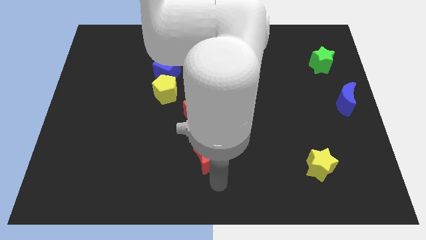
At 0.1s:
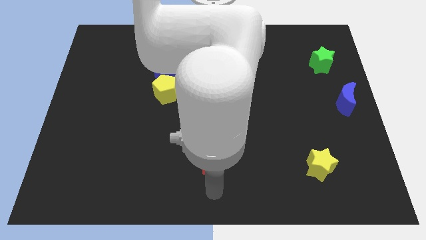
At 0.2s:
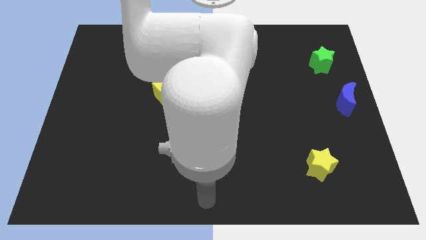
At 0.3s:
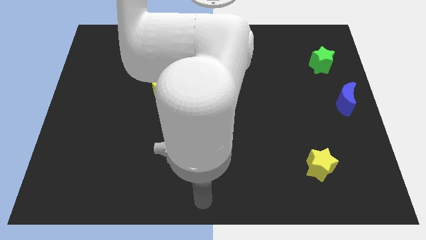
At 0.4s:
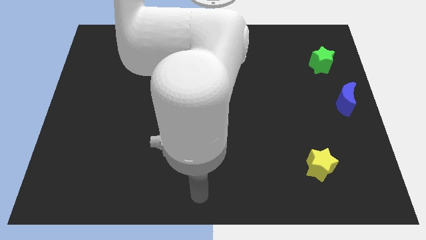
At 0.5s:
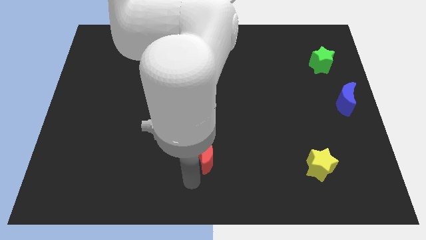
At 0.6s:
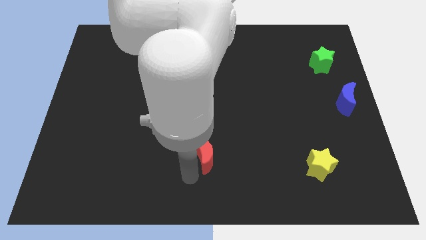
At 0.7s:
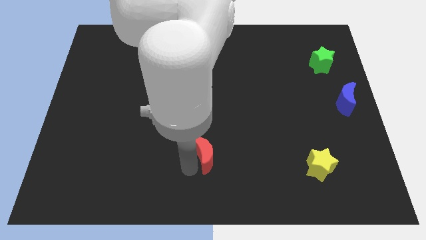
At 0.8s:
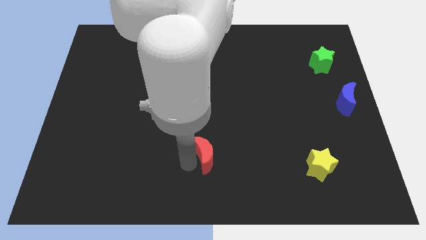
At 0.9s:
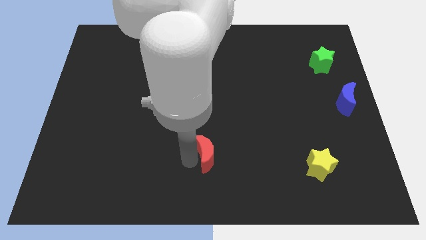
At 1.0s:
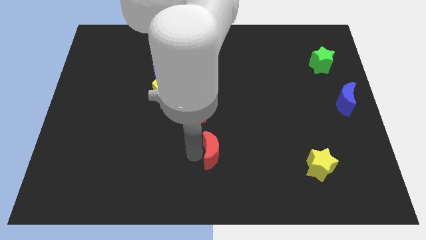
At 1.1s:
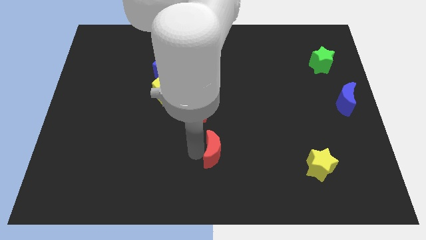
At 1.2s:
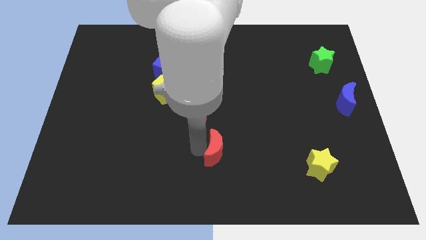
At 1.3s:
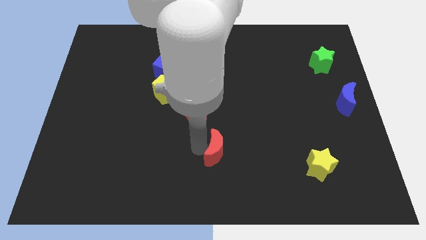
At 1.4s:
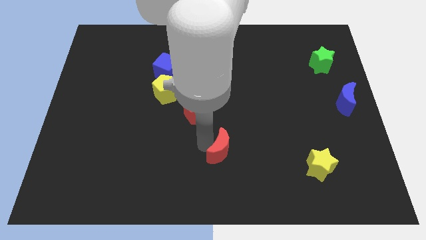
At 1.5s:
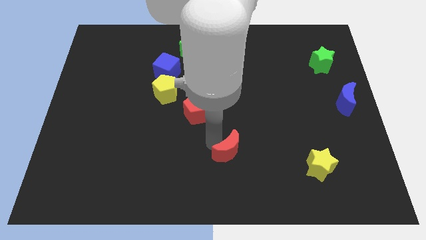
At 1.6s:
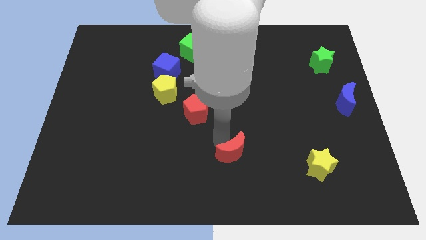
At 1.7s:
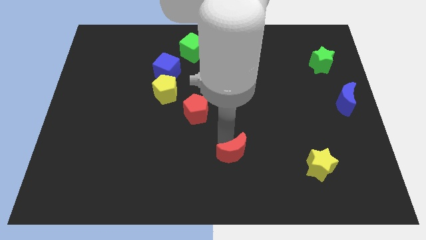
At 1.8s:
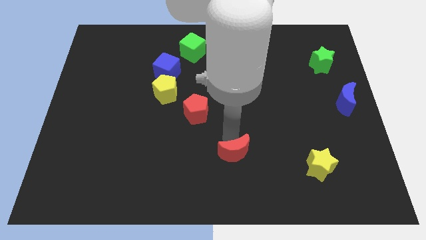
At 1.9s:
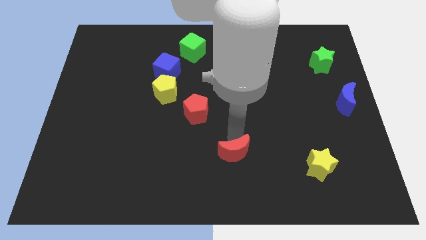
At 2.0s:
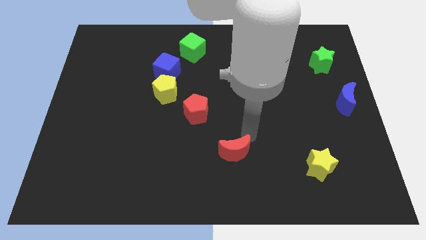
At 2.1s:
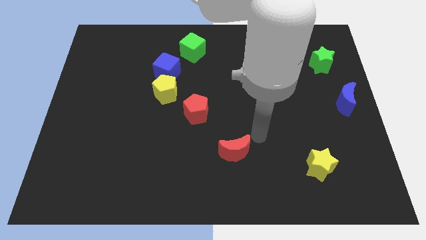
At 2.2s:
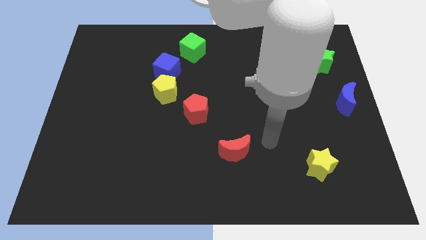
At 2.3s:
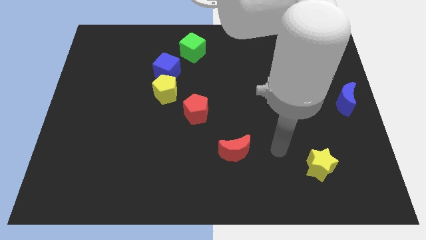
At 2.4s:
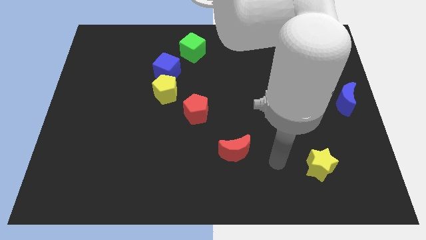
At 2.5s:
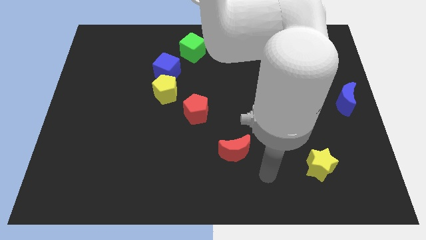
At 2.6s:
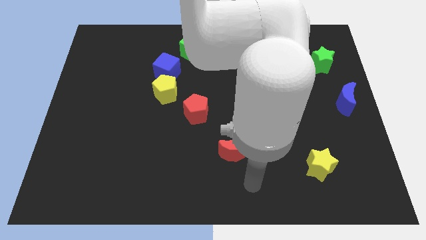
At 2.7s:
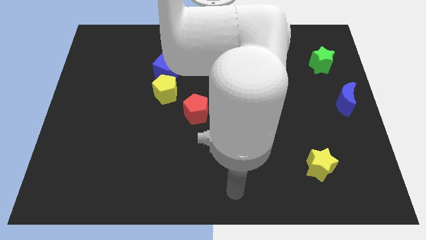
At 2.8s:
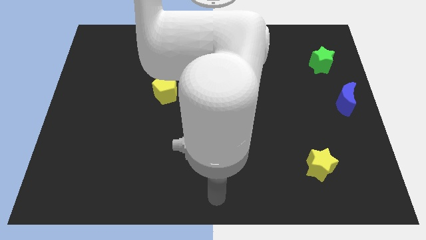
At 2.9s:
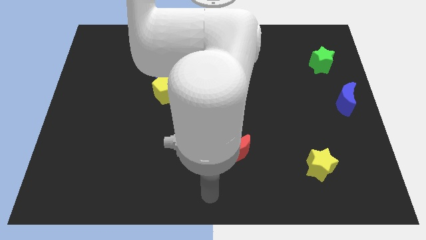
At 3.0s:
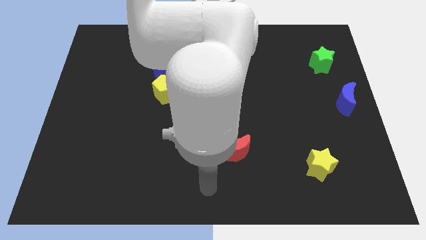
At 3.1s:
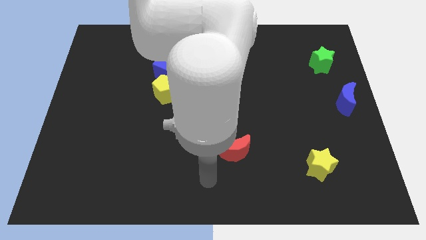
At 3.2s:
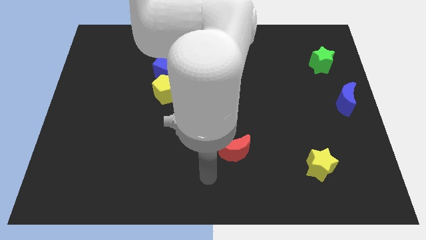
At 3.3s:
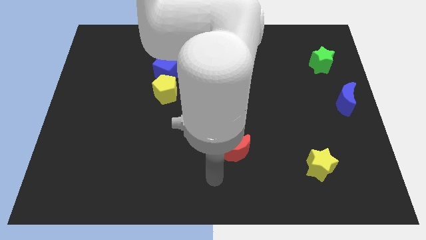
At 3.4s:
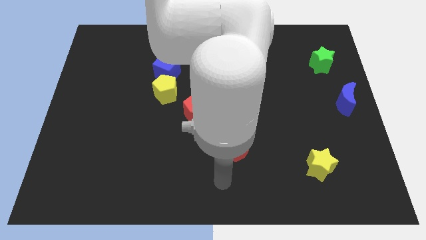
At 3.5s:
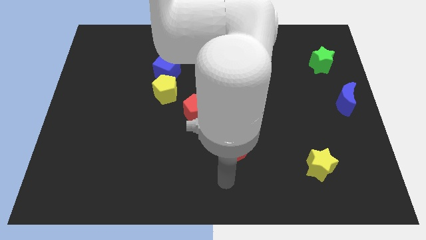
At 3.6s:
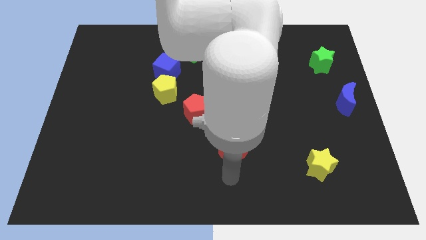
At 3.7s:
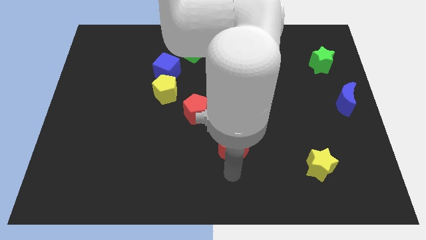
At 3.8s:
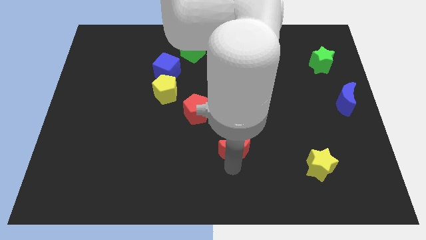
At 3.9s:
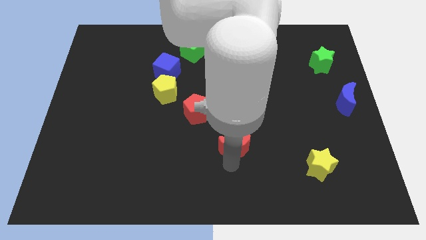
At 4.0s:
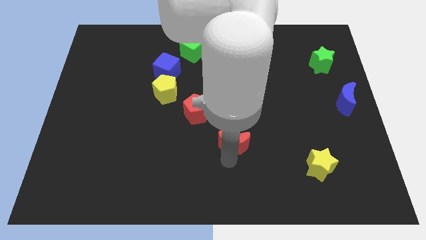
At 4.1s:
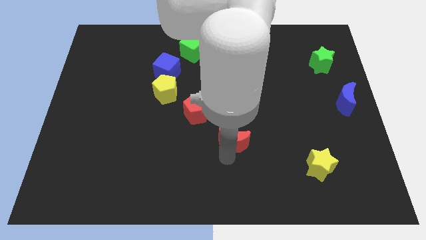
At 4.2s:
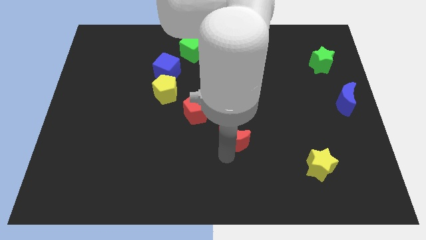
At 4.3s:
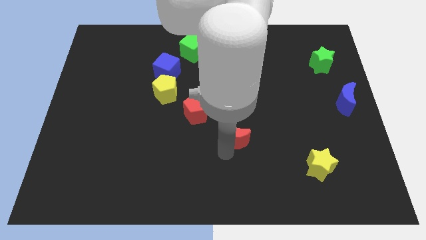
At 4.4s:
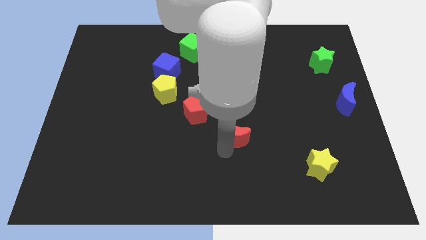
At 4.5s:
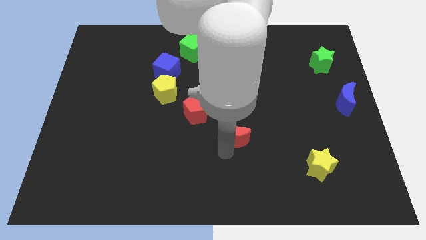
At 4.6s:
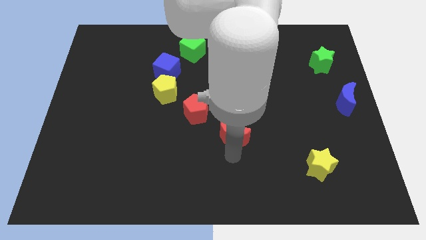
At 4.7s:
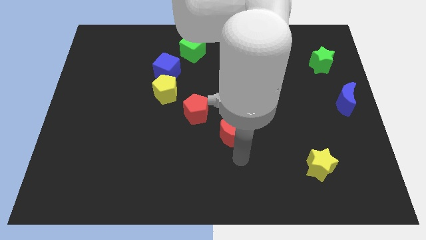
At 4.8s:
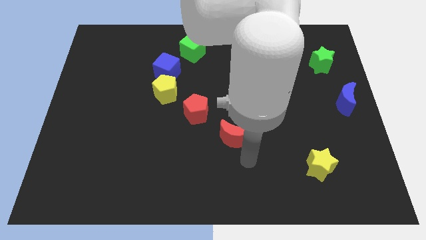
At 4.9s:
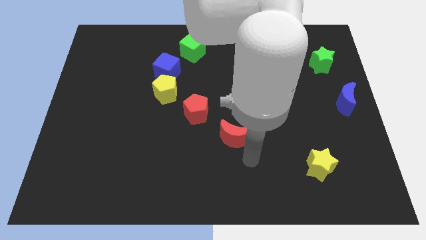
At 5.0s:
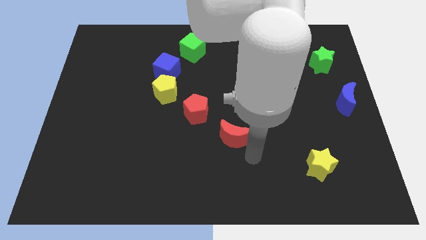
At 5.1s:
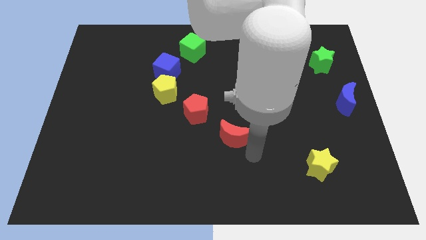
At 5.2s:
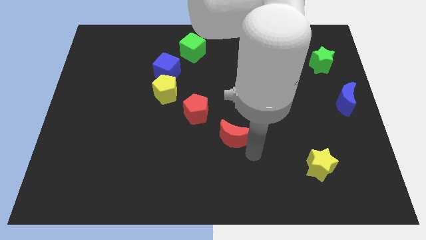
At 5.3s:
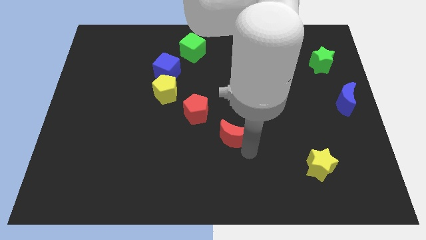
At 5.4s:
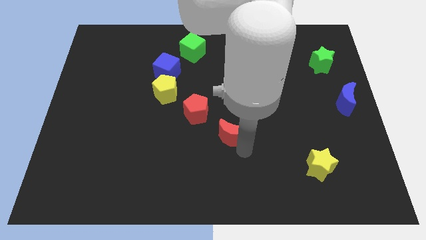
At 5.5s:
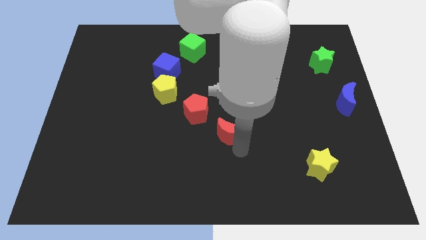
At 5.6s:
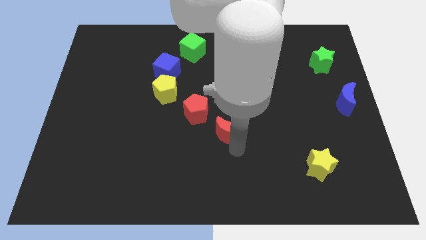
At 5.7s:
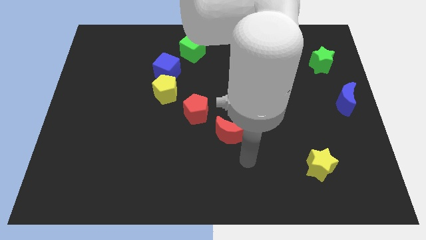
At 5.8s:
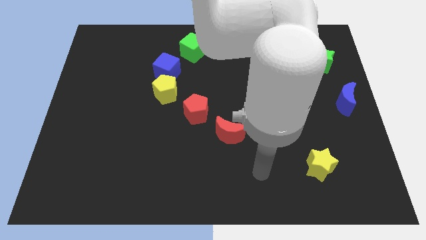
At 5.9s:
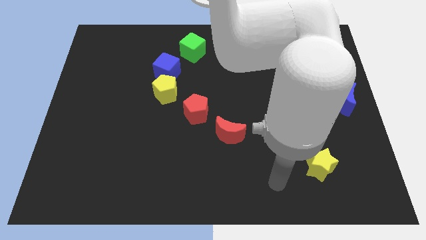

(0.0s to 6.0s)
move the red crescent towards the center of the board

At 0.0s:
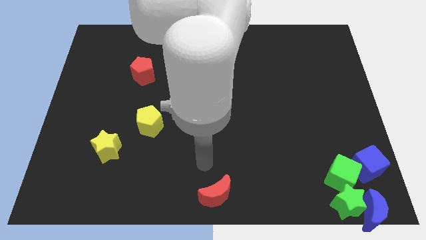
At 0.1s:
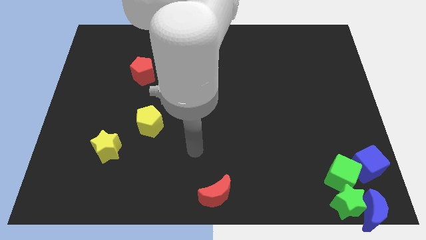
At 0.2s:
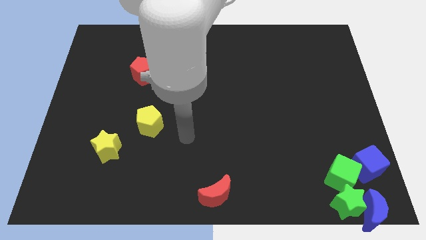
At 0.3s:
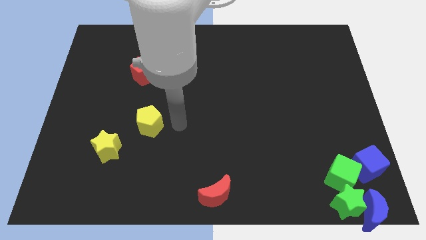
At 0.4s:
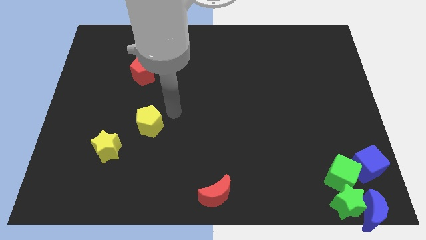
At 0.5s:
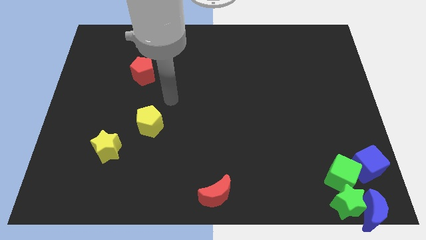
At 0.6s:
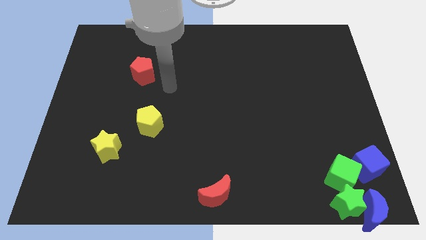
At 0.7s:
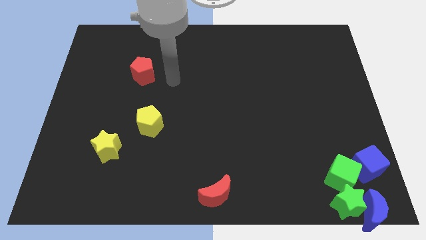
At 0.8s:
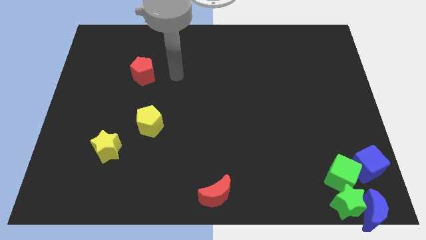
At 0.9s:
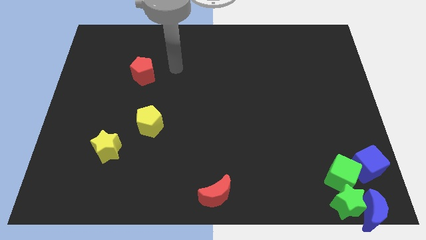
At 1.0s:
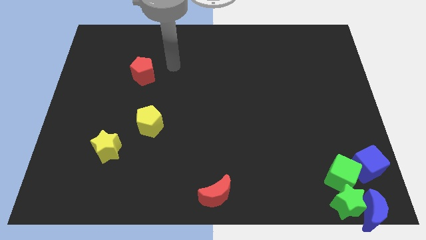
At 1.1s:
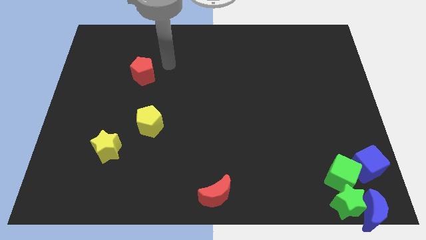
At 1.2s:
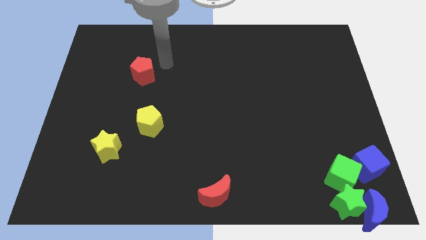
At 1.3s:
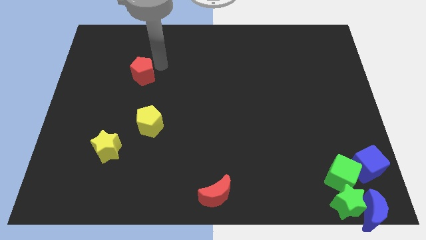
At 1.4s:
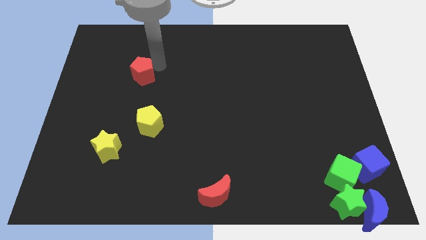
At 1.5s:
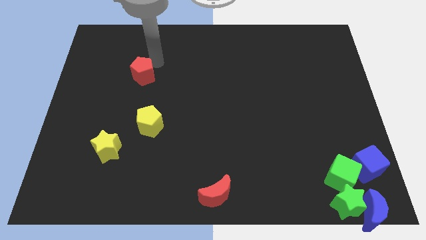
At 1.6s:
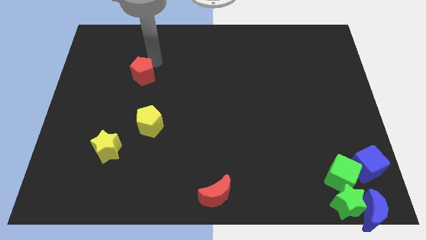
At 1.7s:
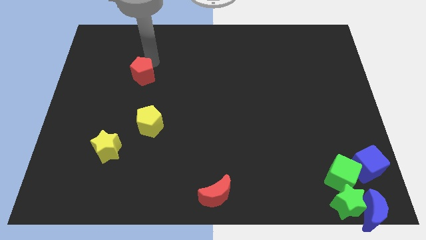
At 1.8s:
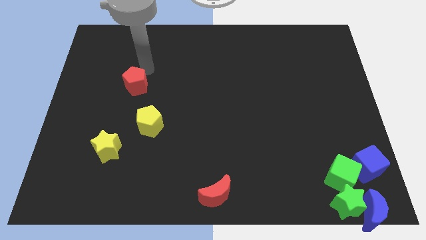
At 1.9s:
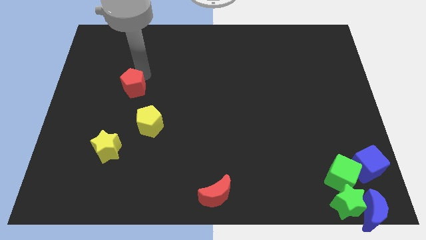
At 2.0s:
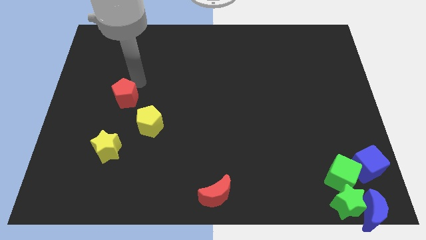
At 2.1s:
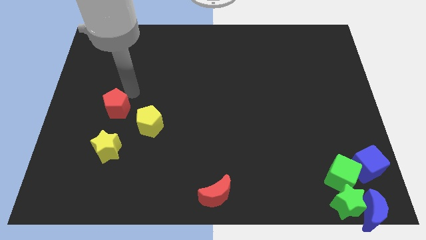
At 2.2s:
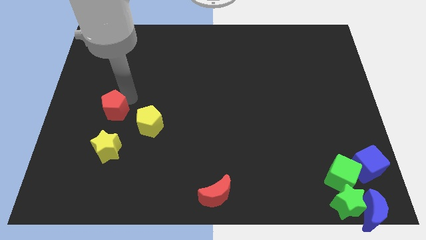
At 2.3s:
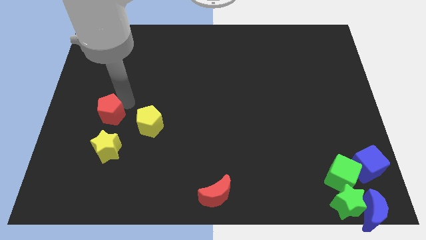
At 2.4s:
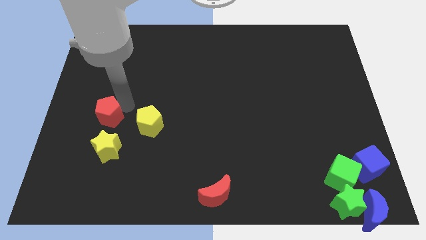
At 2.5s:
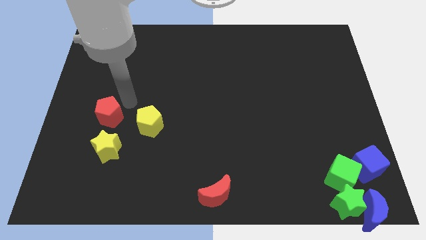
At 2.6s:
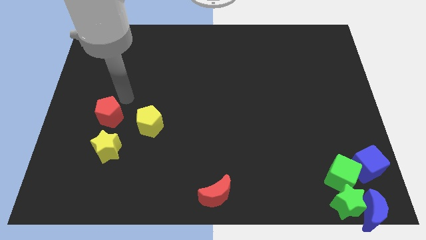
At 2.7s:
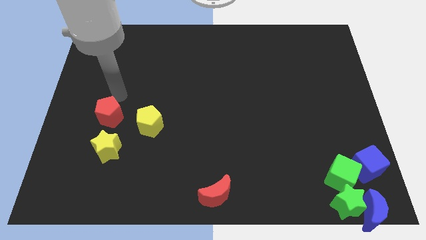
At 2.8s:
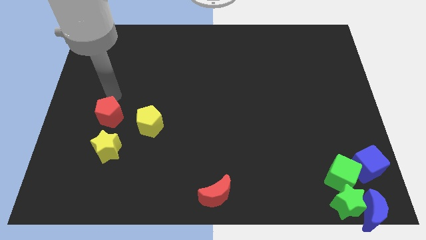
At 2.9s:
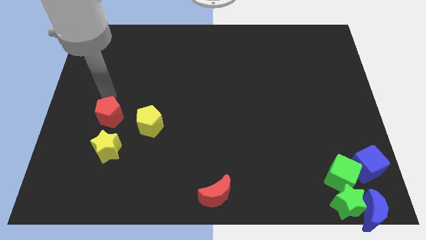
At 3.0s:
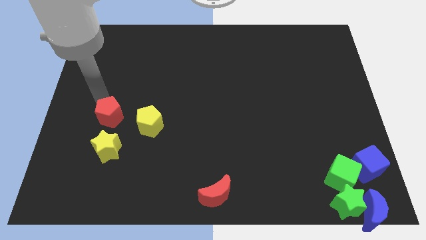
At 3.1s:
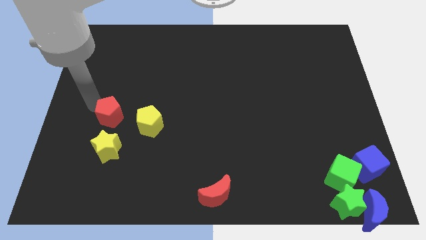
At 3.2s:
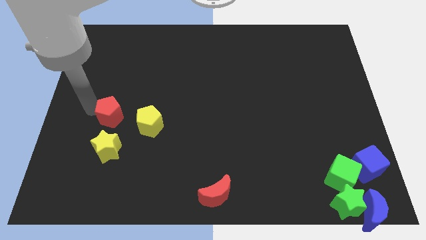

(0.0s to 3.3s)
place the red pentagon to the left of the yellow pentagon
